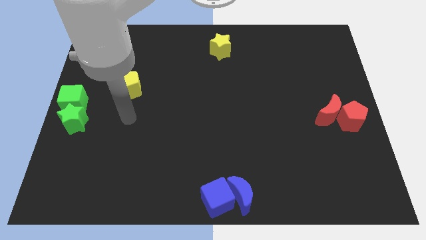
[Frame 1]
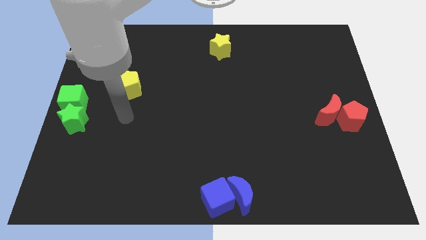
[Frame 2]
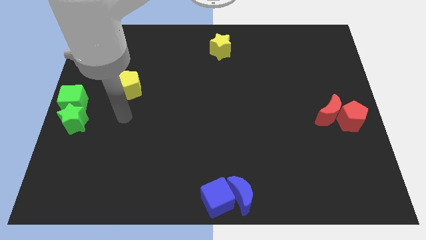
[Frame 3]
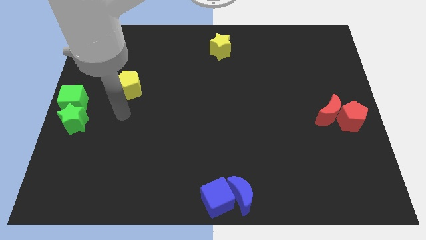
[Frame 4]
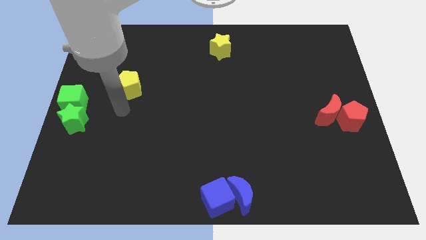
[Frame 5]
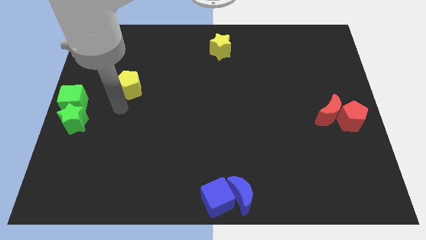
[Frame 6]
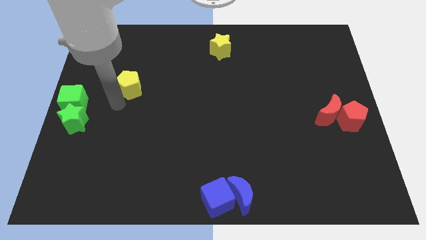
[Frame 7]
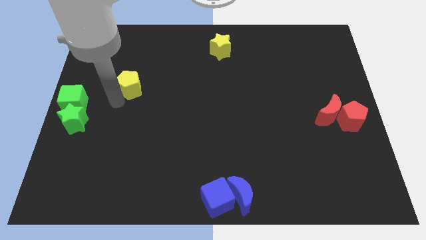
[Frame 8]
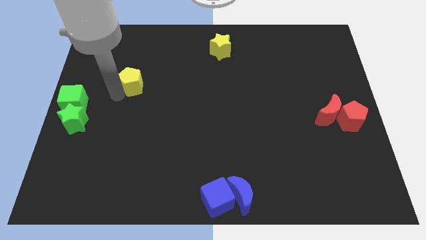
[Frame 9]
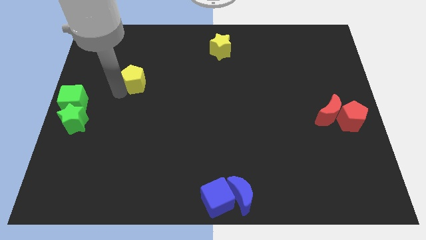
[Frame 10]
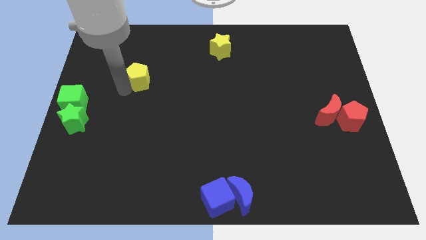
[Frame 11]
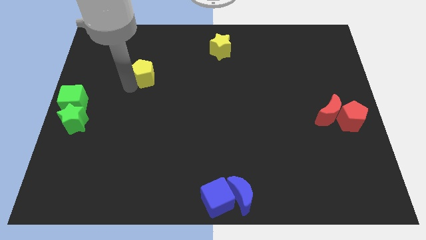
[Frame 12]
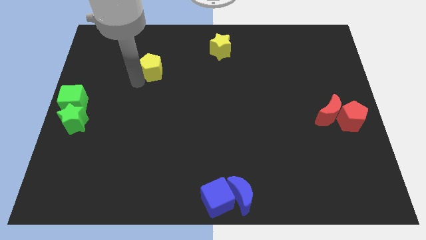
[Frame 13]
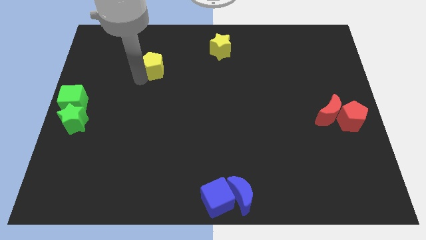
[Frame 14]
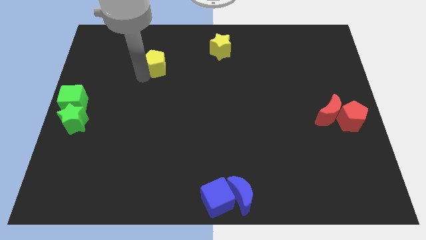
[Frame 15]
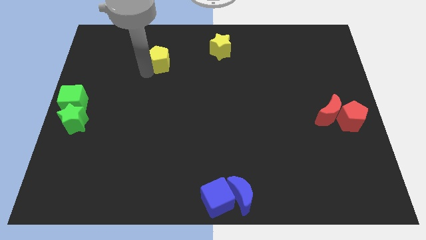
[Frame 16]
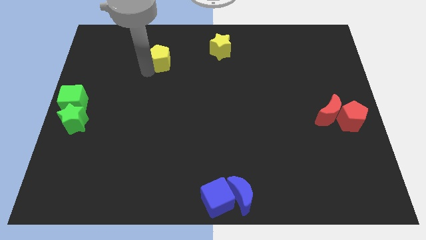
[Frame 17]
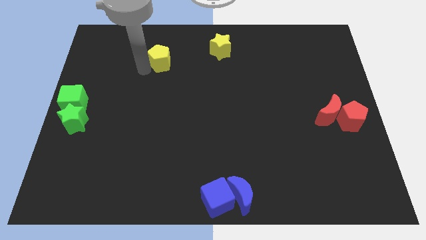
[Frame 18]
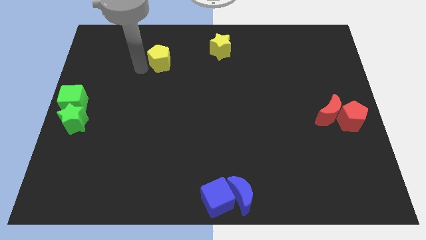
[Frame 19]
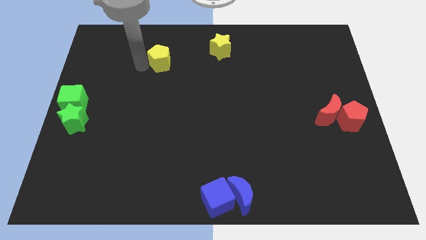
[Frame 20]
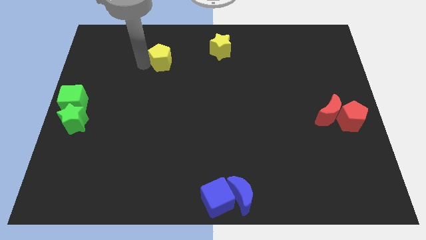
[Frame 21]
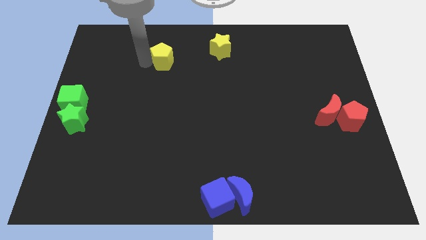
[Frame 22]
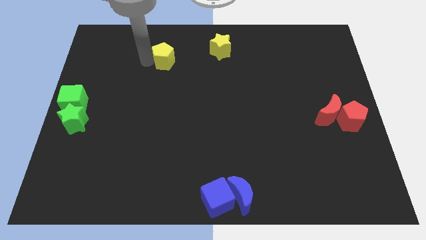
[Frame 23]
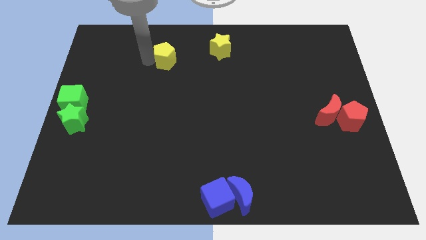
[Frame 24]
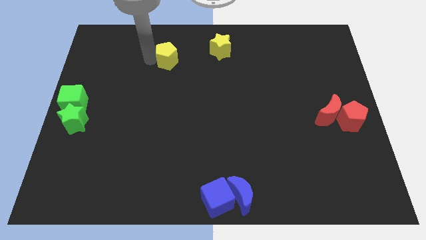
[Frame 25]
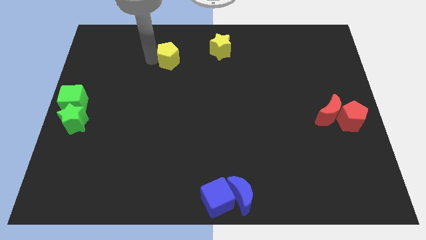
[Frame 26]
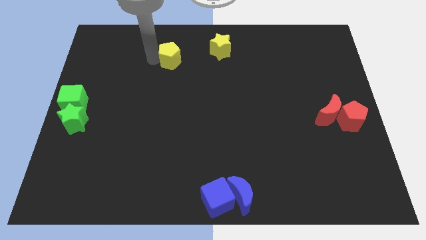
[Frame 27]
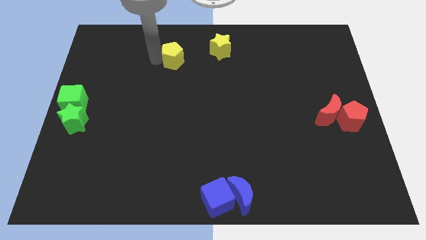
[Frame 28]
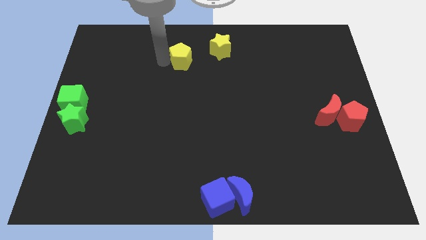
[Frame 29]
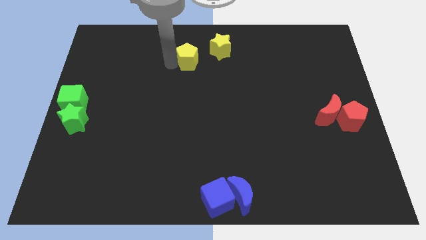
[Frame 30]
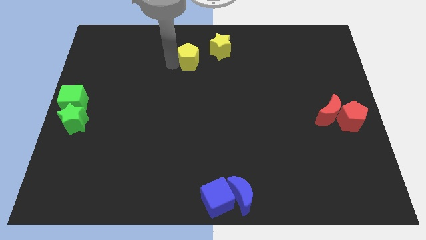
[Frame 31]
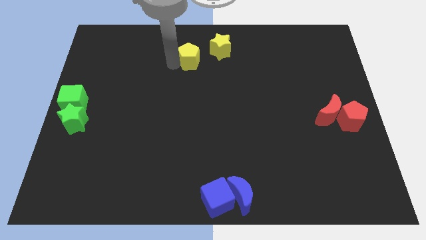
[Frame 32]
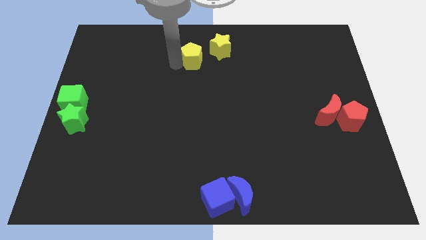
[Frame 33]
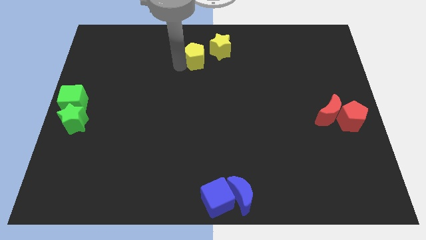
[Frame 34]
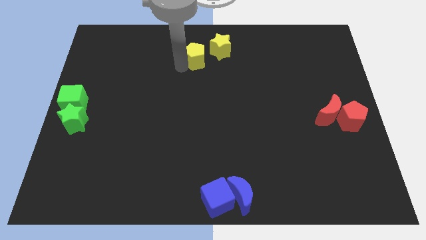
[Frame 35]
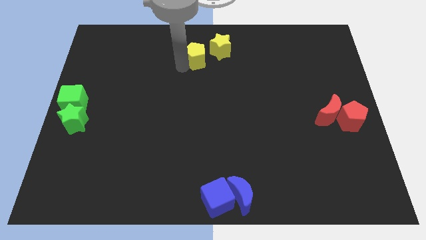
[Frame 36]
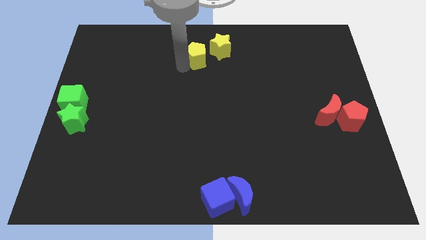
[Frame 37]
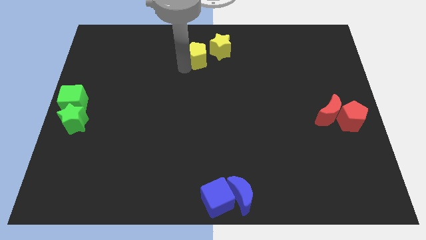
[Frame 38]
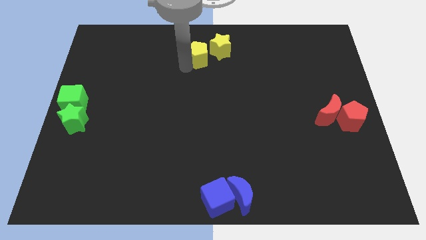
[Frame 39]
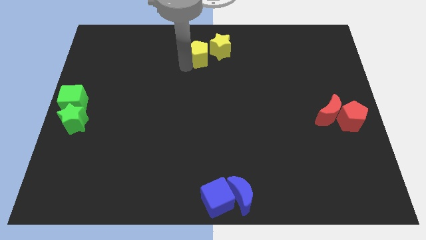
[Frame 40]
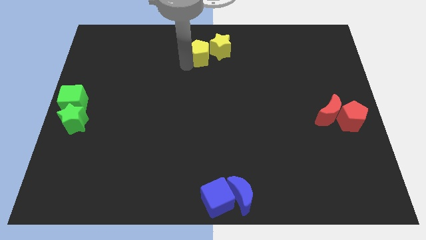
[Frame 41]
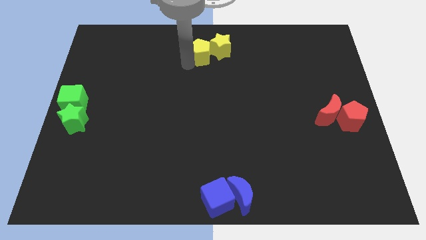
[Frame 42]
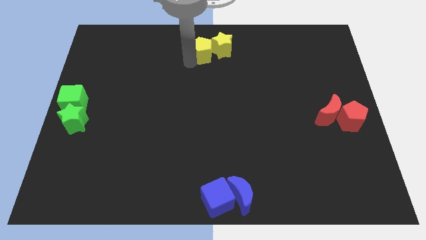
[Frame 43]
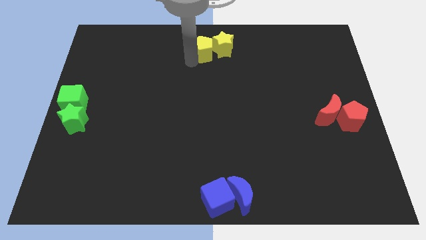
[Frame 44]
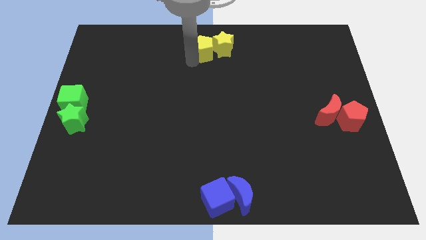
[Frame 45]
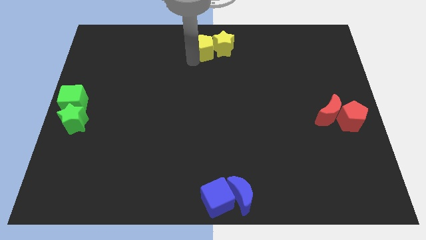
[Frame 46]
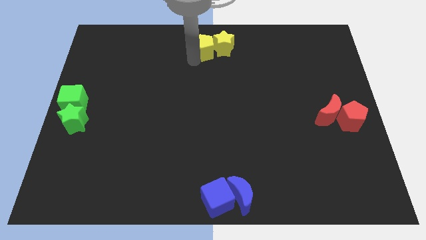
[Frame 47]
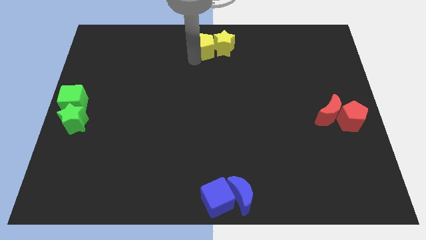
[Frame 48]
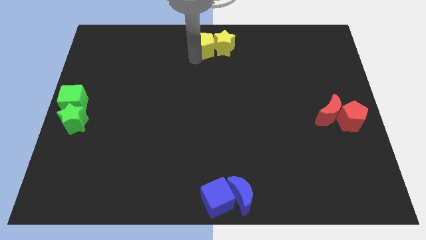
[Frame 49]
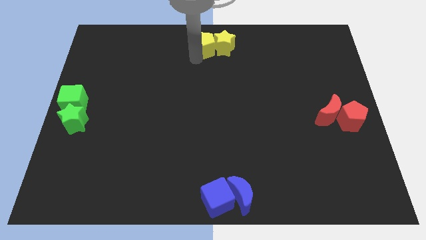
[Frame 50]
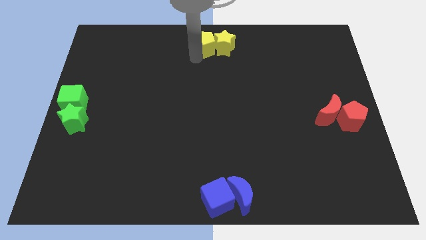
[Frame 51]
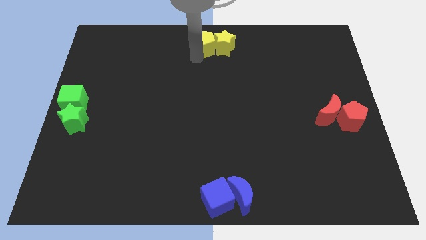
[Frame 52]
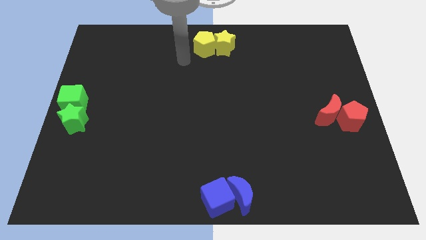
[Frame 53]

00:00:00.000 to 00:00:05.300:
place yellow pentagon on the left side of the yellow star

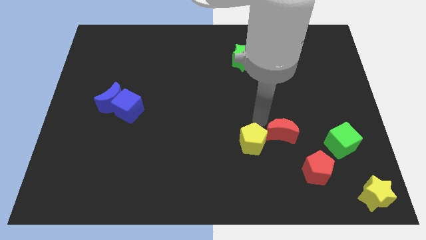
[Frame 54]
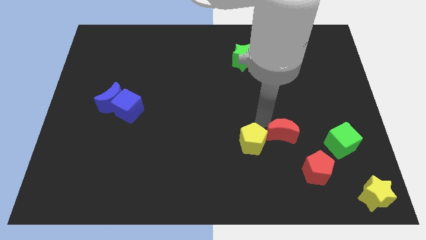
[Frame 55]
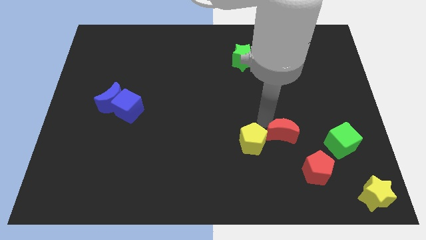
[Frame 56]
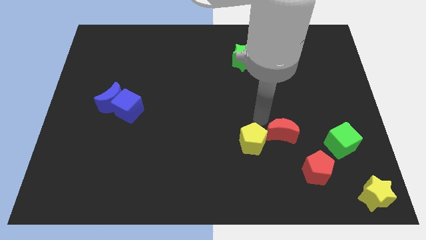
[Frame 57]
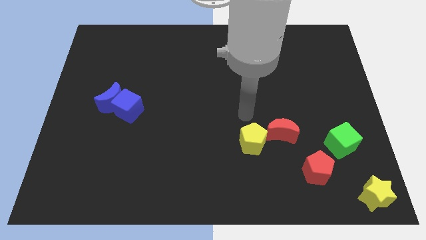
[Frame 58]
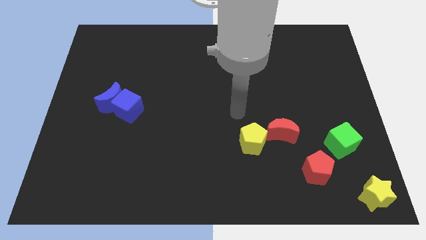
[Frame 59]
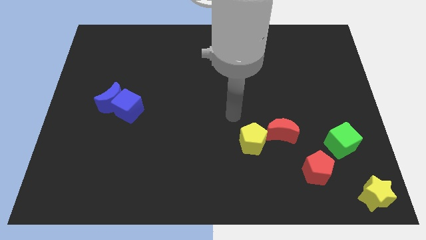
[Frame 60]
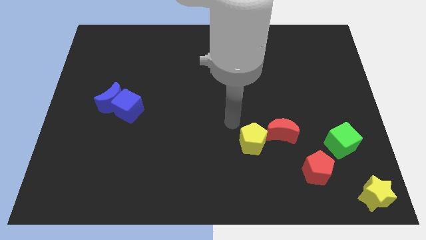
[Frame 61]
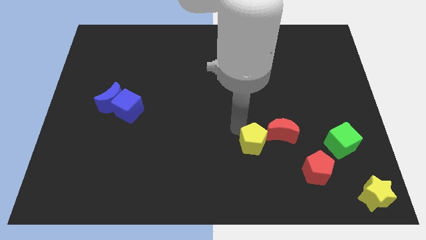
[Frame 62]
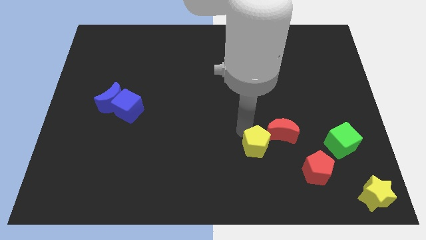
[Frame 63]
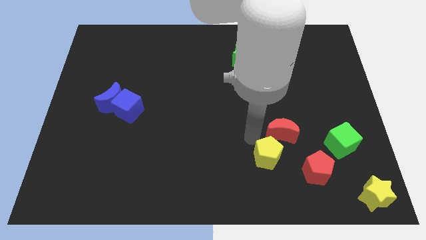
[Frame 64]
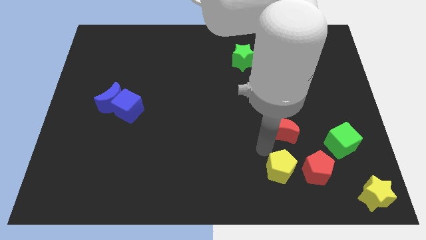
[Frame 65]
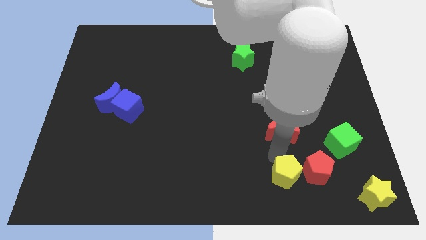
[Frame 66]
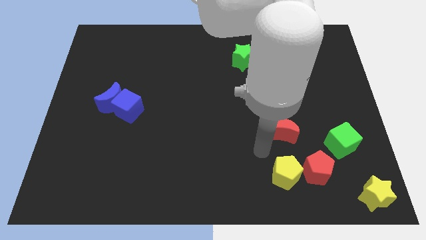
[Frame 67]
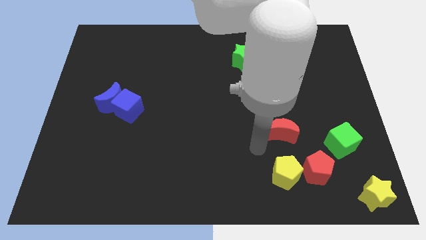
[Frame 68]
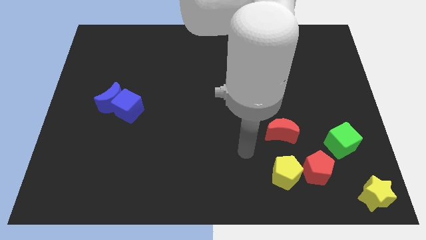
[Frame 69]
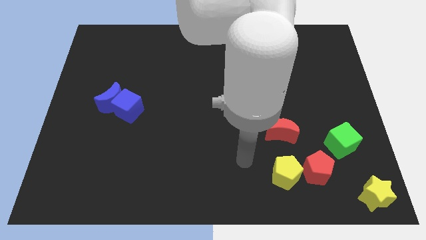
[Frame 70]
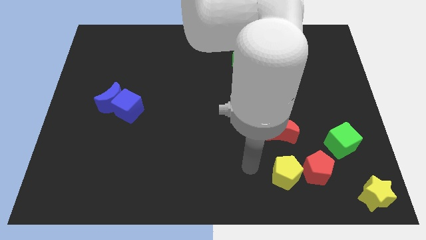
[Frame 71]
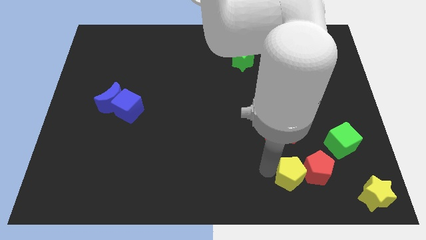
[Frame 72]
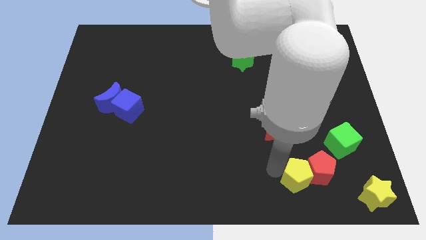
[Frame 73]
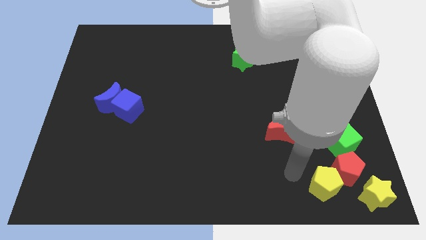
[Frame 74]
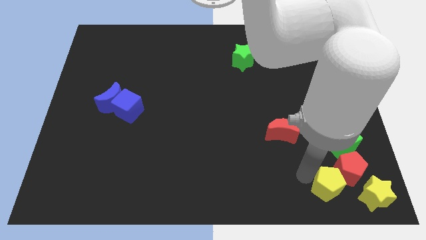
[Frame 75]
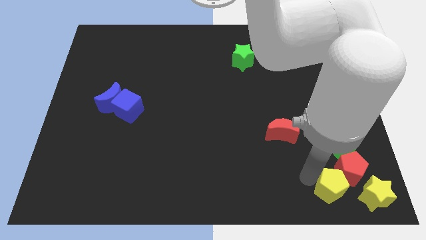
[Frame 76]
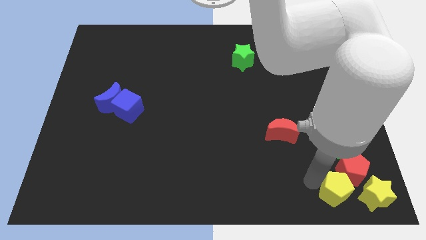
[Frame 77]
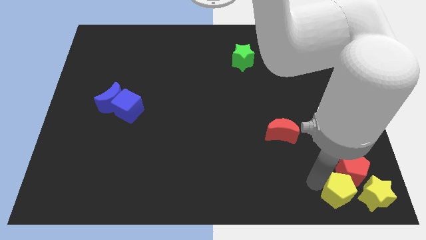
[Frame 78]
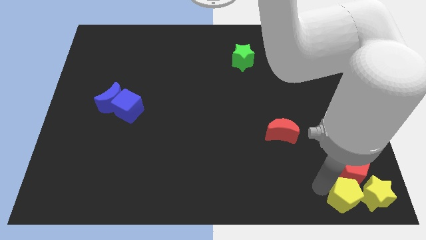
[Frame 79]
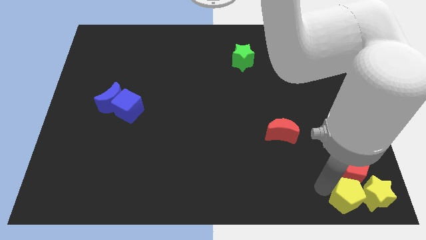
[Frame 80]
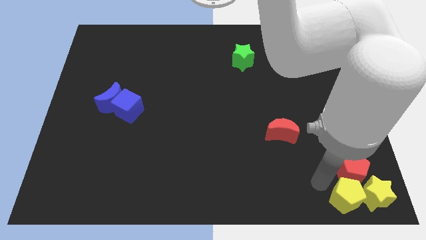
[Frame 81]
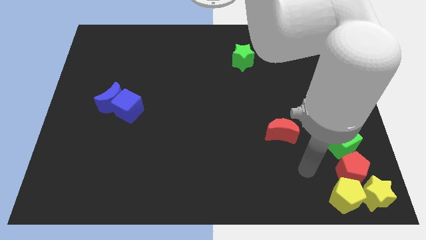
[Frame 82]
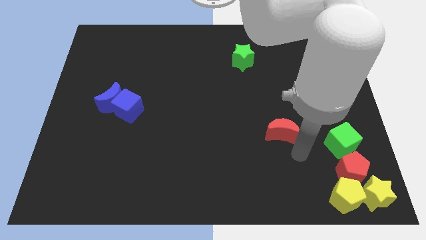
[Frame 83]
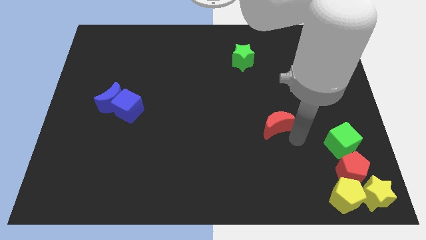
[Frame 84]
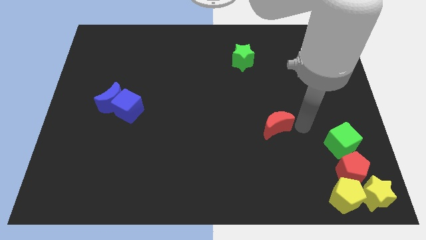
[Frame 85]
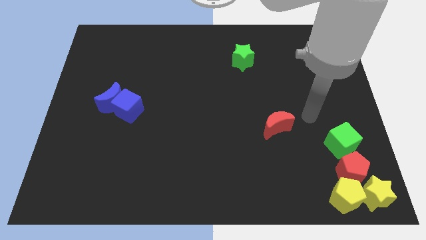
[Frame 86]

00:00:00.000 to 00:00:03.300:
push the yellow pentagon to the bottom of the red pentagon

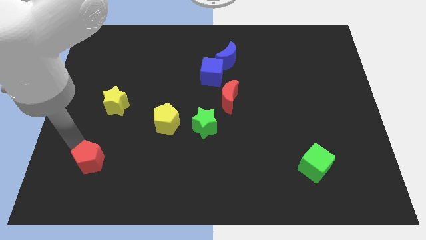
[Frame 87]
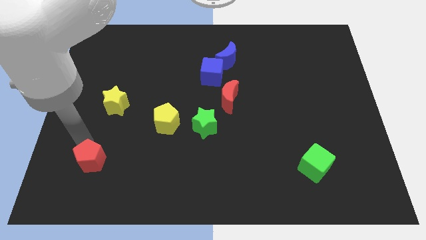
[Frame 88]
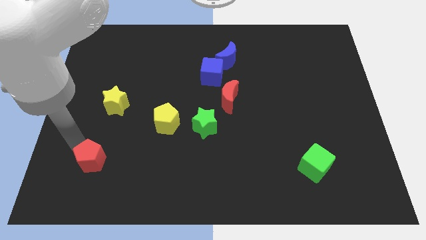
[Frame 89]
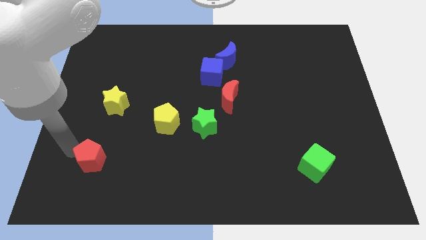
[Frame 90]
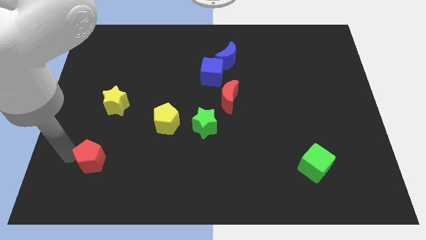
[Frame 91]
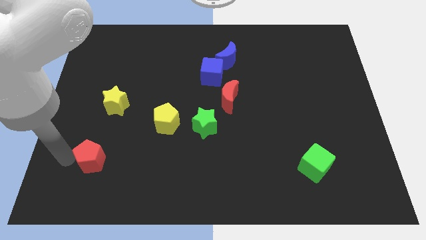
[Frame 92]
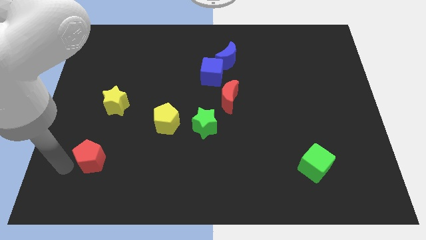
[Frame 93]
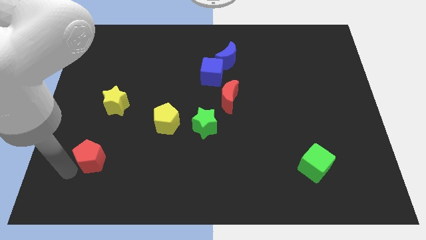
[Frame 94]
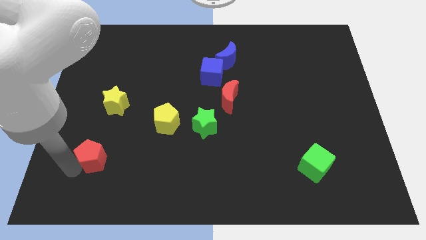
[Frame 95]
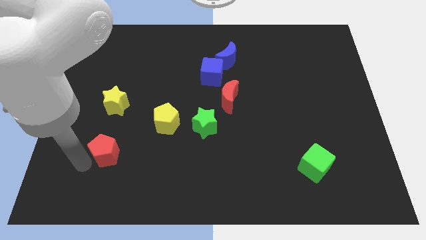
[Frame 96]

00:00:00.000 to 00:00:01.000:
place the red pentagon vertically below the yellow star
